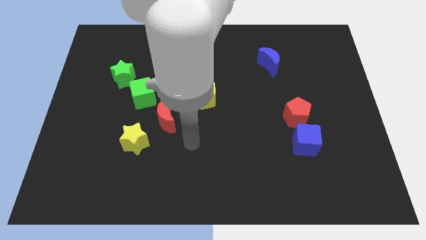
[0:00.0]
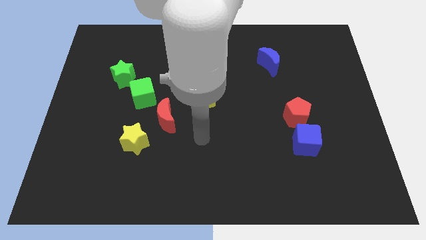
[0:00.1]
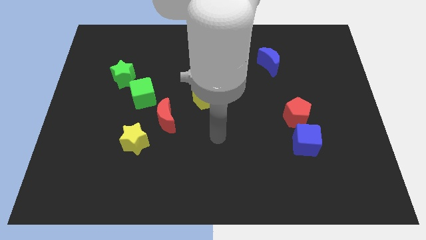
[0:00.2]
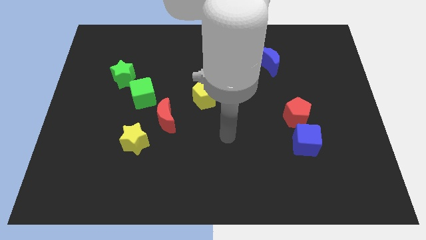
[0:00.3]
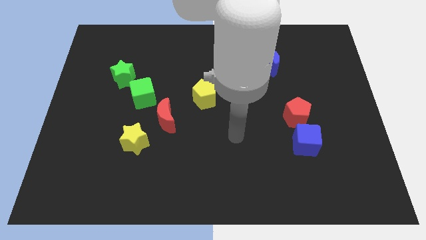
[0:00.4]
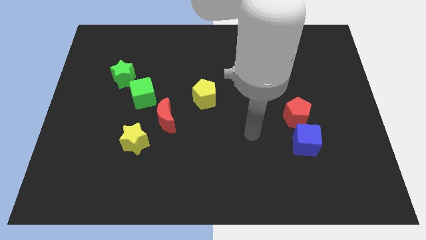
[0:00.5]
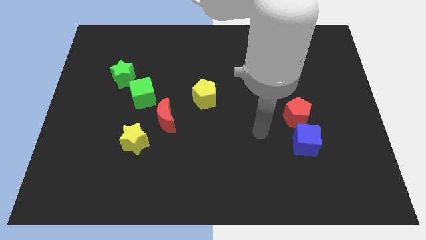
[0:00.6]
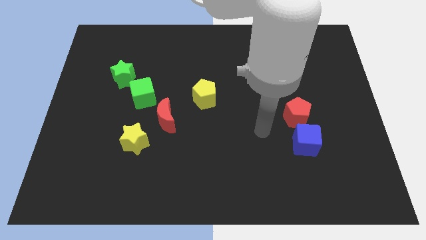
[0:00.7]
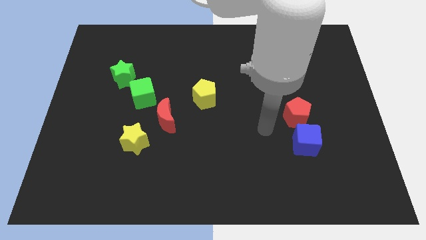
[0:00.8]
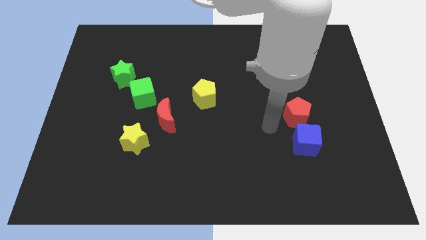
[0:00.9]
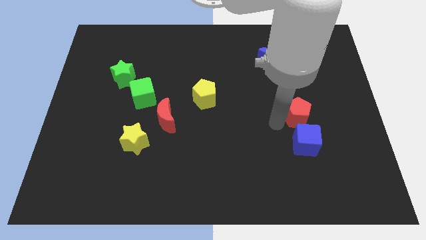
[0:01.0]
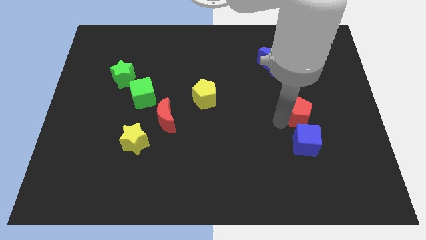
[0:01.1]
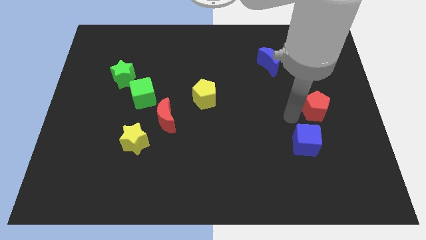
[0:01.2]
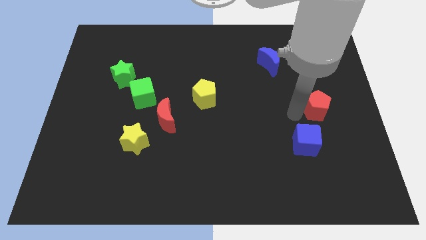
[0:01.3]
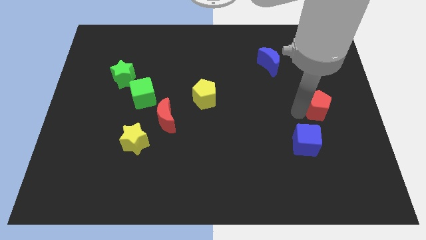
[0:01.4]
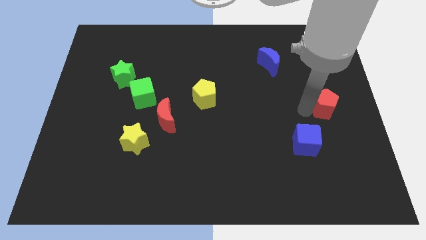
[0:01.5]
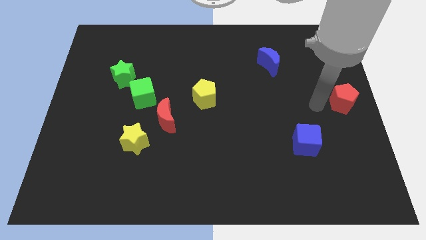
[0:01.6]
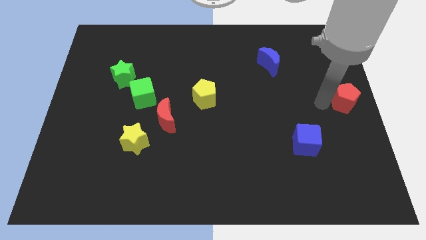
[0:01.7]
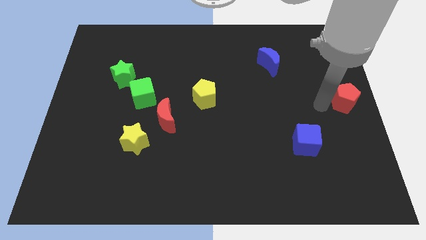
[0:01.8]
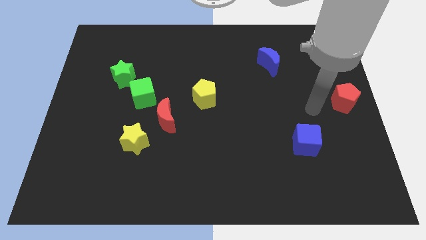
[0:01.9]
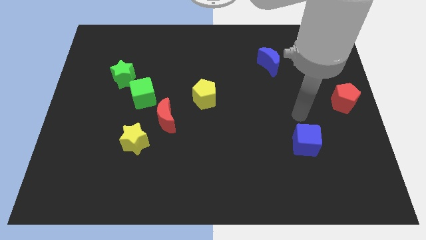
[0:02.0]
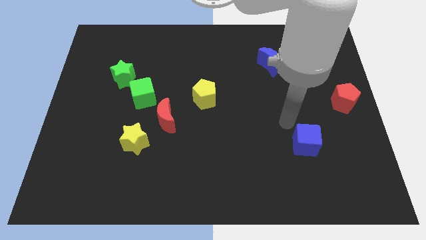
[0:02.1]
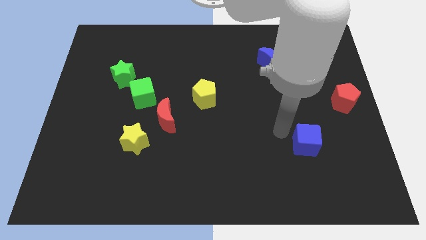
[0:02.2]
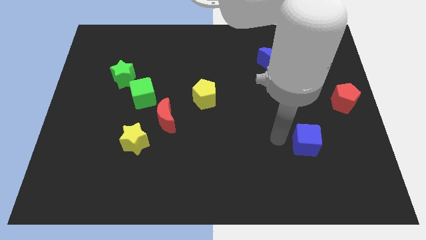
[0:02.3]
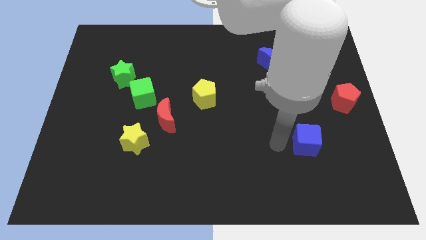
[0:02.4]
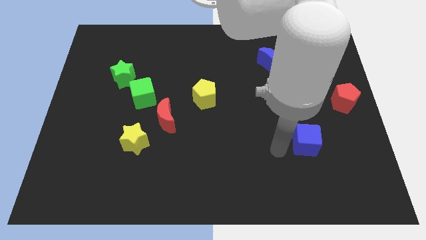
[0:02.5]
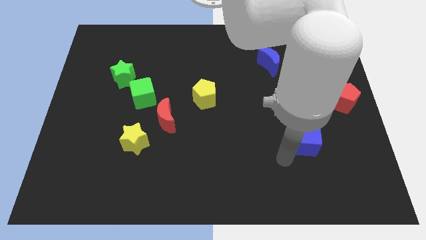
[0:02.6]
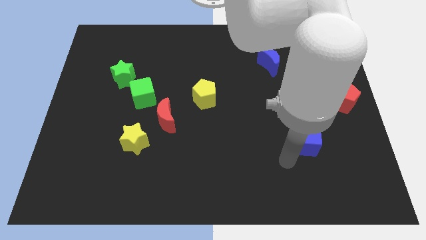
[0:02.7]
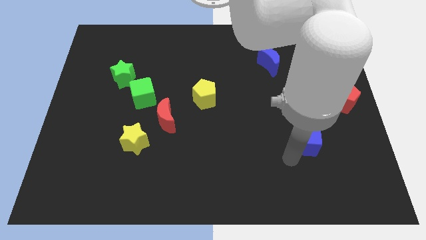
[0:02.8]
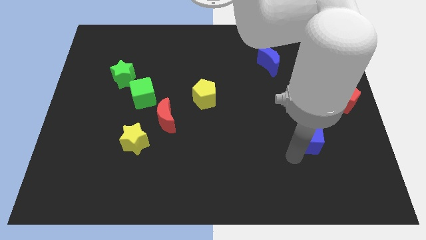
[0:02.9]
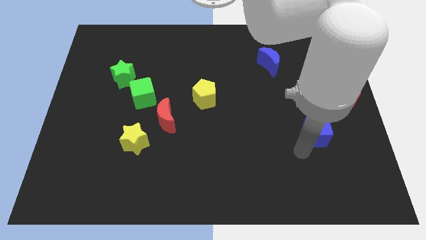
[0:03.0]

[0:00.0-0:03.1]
move the red pentagon to the right side

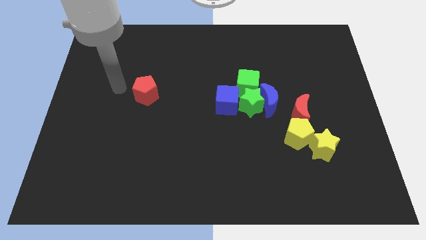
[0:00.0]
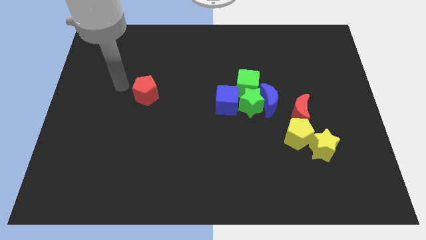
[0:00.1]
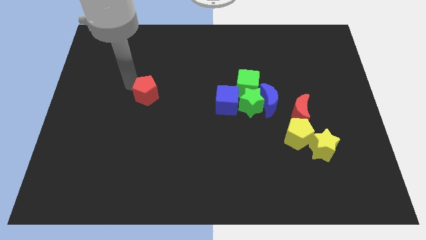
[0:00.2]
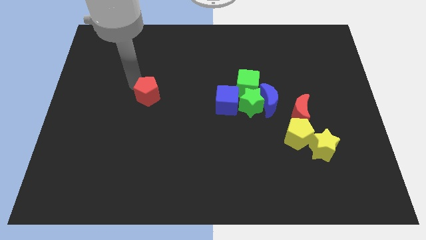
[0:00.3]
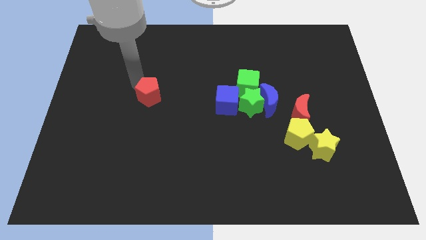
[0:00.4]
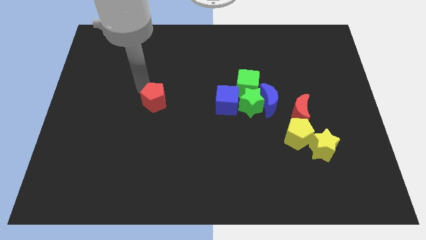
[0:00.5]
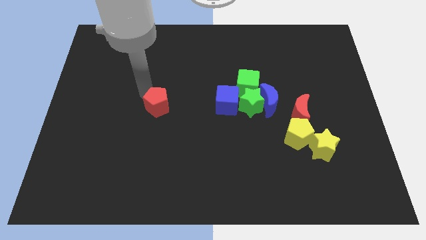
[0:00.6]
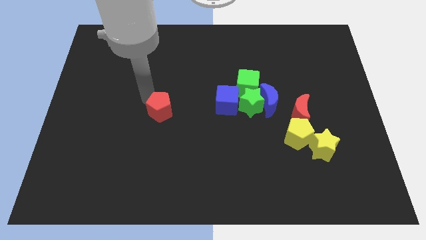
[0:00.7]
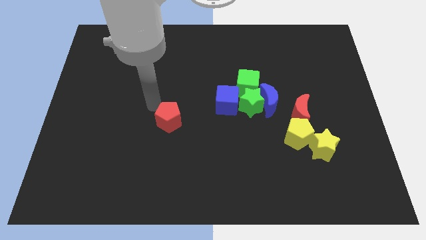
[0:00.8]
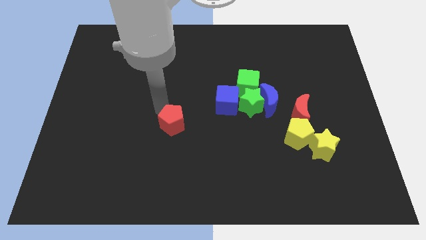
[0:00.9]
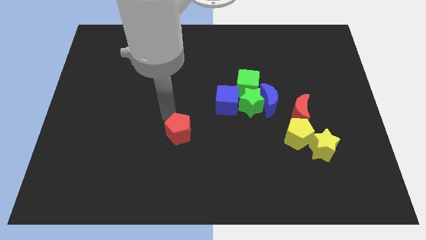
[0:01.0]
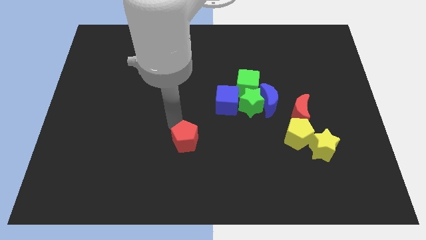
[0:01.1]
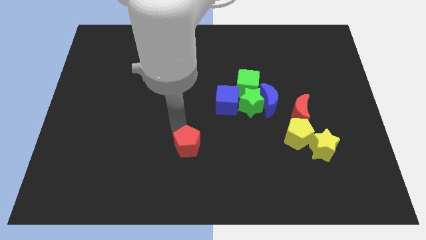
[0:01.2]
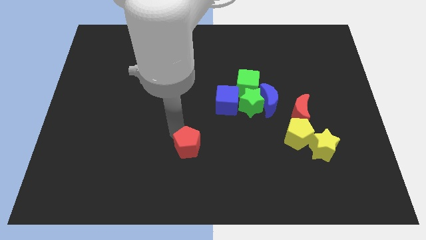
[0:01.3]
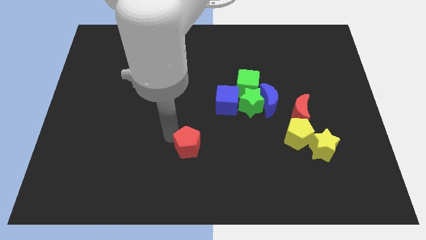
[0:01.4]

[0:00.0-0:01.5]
push the red pentagon towards the bottom center of the board

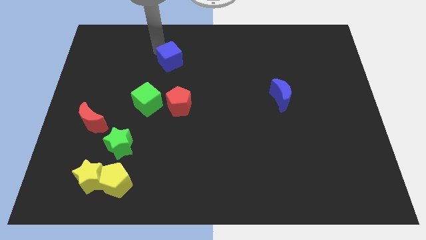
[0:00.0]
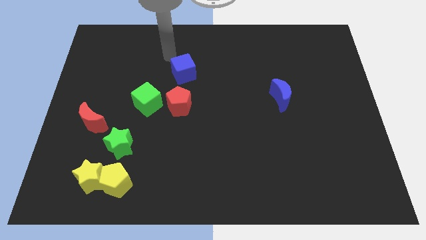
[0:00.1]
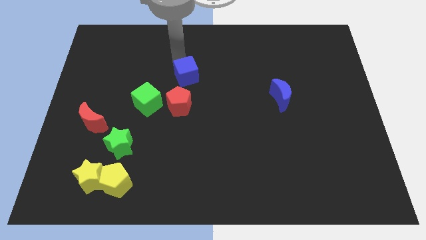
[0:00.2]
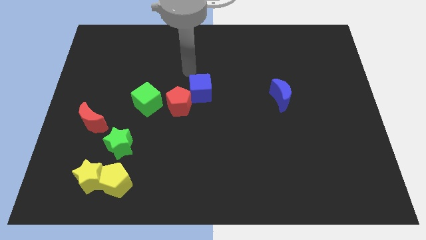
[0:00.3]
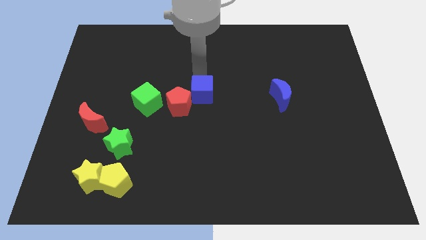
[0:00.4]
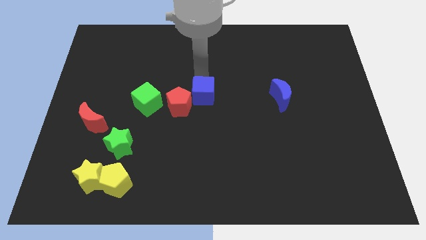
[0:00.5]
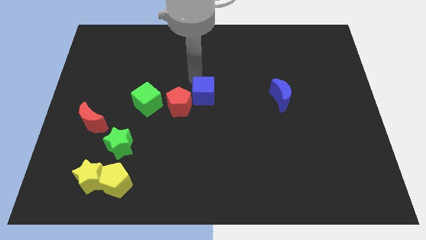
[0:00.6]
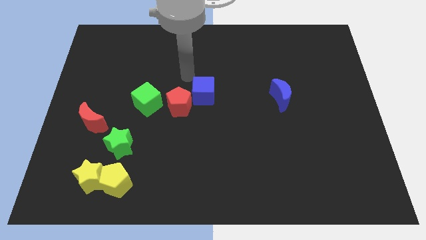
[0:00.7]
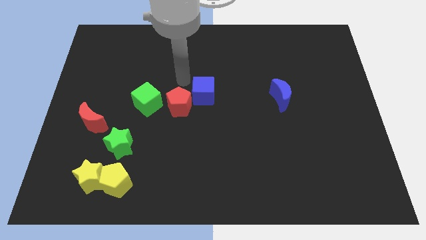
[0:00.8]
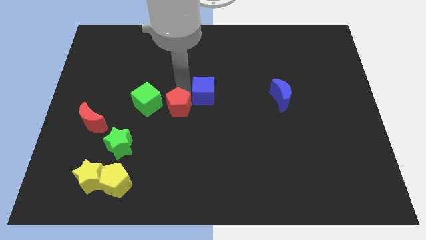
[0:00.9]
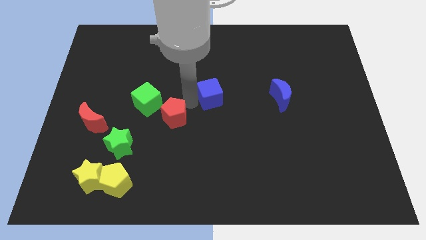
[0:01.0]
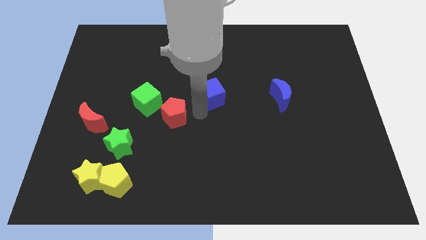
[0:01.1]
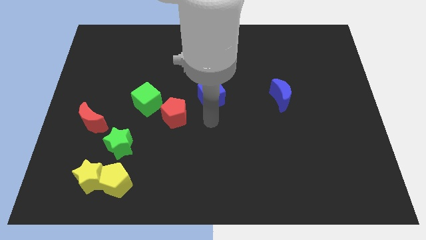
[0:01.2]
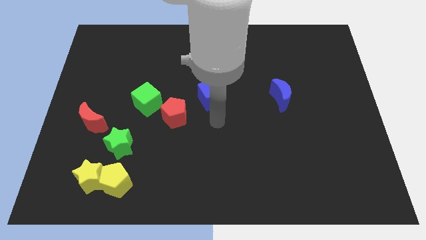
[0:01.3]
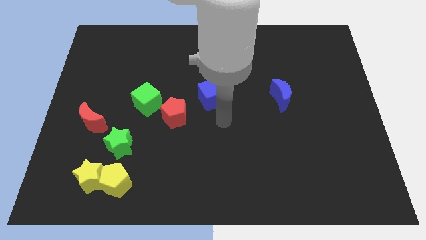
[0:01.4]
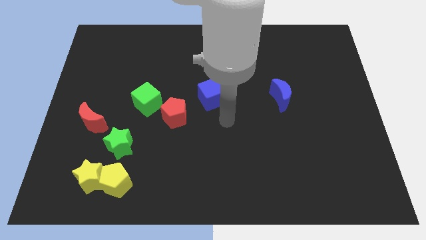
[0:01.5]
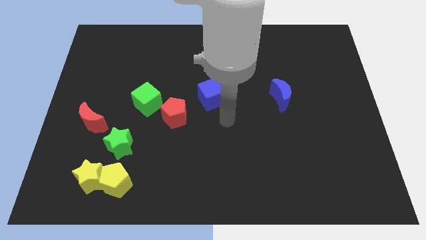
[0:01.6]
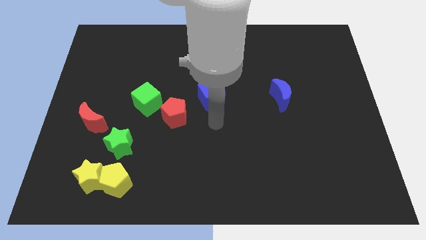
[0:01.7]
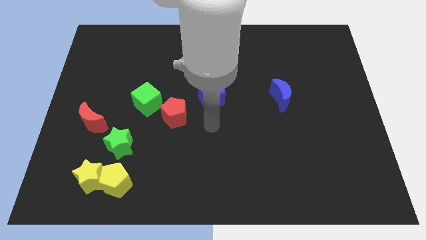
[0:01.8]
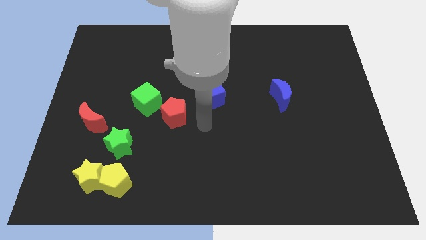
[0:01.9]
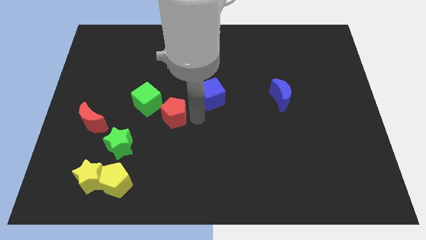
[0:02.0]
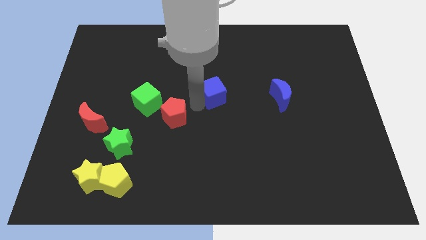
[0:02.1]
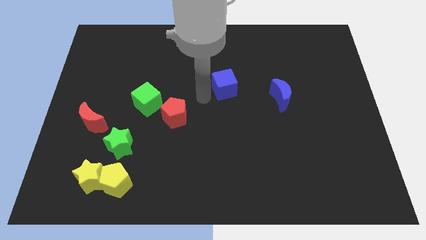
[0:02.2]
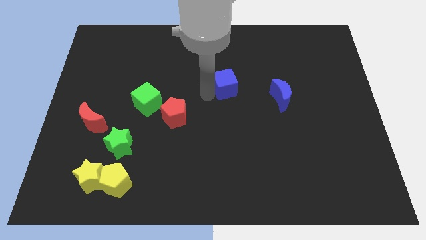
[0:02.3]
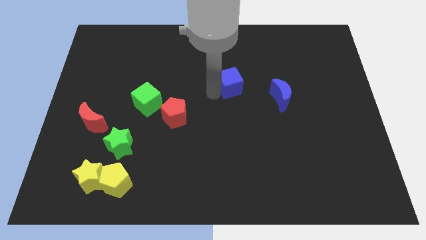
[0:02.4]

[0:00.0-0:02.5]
push the blue cube into the red pentagon

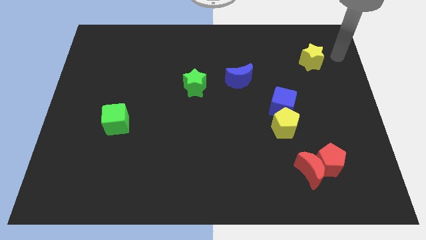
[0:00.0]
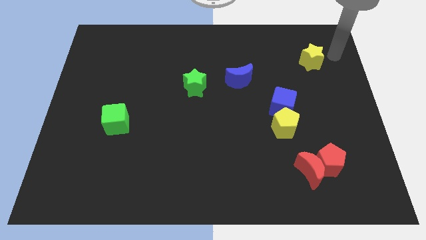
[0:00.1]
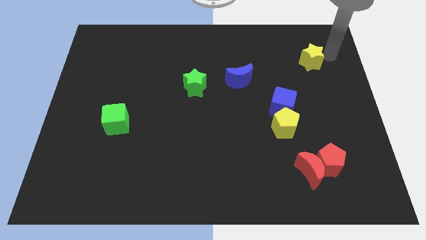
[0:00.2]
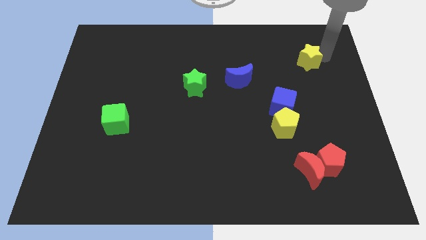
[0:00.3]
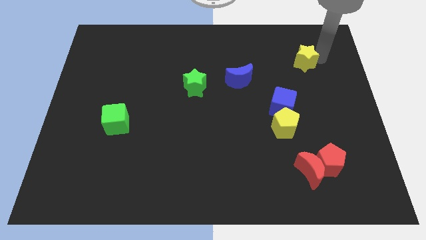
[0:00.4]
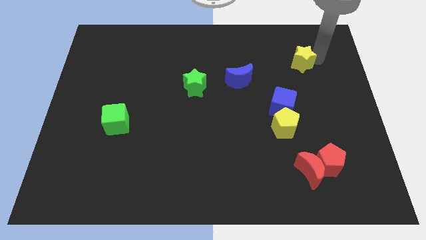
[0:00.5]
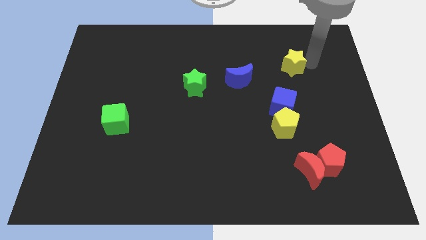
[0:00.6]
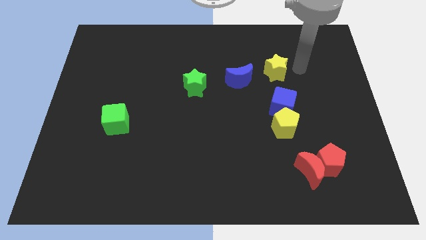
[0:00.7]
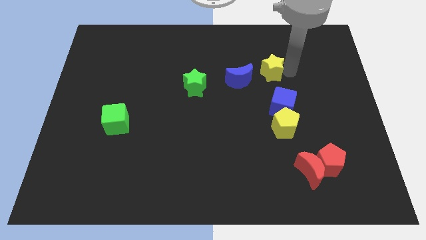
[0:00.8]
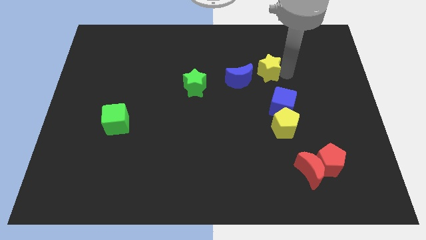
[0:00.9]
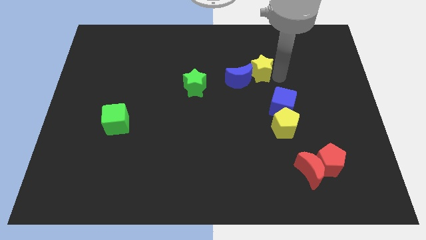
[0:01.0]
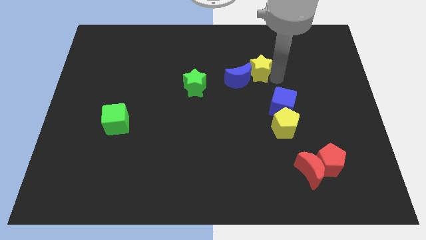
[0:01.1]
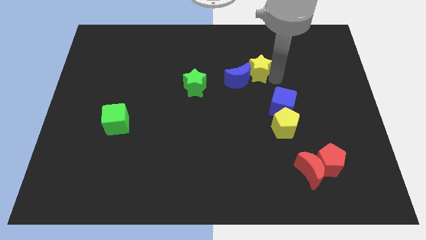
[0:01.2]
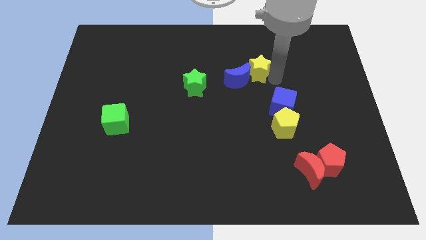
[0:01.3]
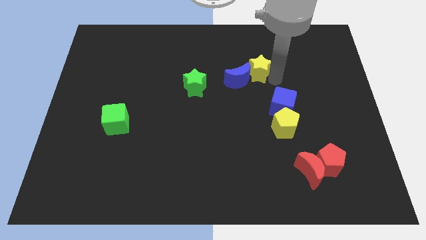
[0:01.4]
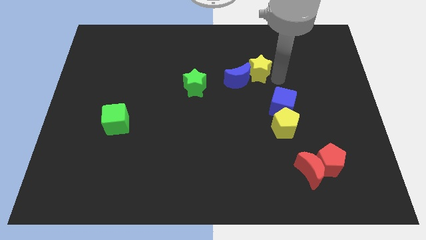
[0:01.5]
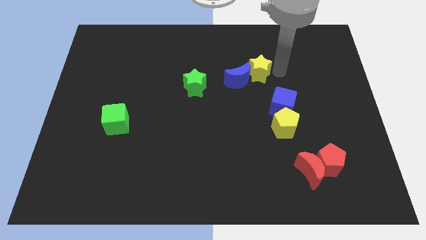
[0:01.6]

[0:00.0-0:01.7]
place the yellow star at the top of the blue cube

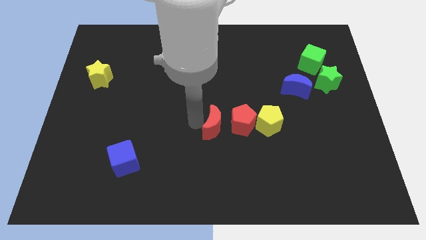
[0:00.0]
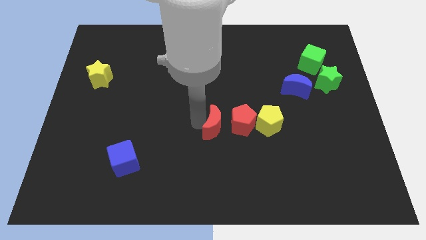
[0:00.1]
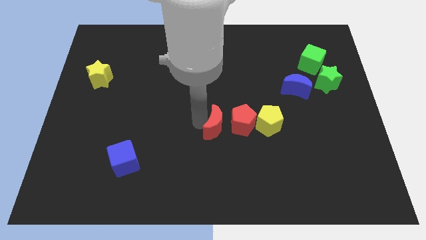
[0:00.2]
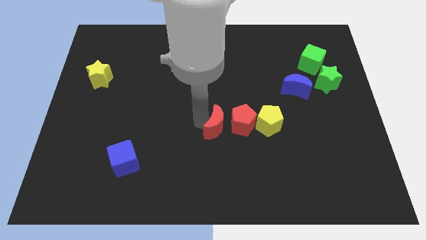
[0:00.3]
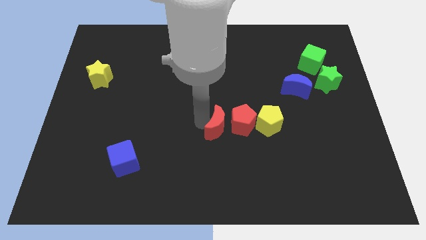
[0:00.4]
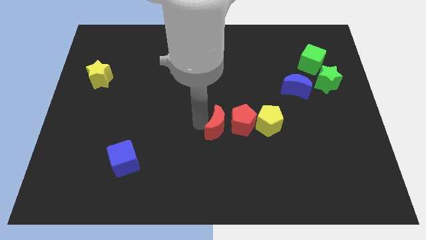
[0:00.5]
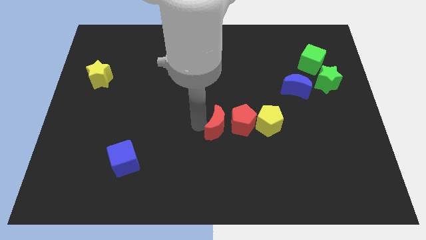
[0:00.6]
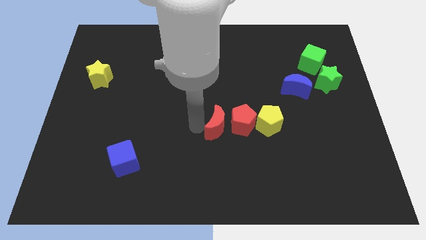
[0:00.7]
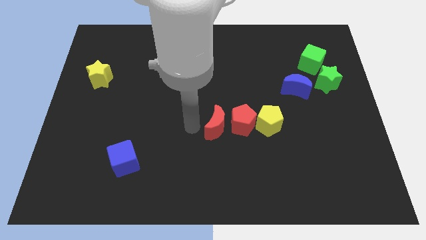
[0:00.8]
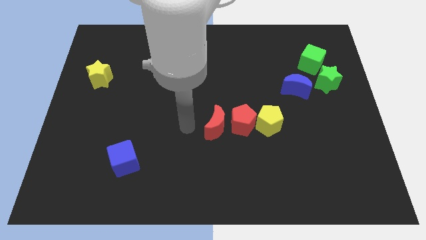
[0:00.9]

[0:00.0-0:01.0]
place red moon adjacent to red pentagon
